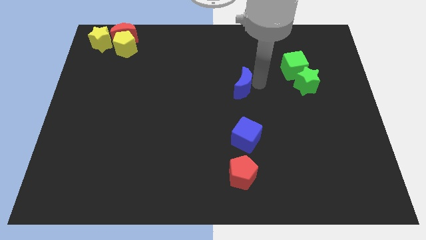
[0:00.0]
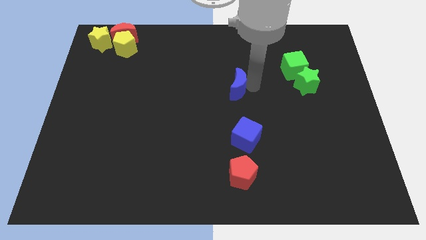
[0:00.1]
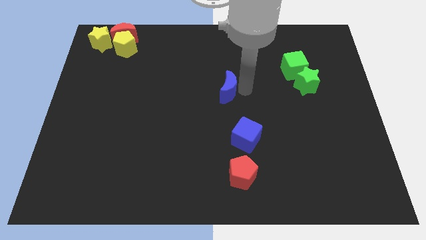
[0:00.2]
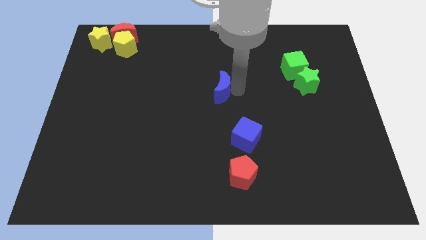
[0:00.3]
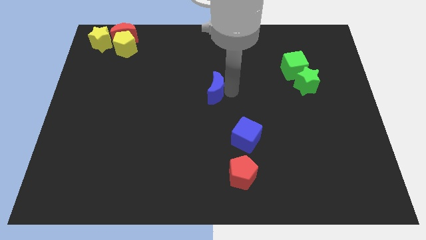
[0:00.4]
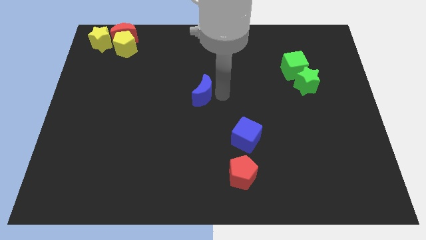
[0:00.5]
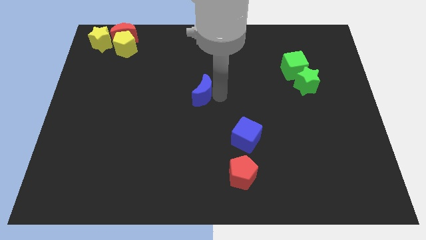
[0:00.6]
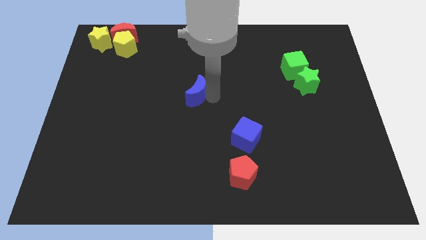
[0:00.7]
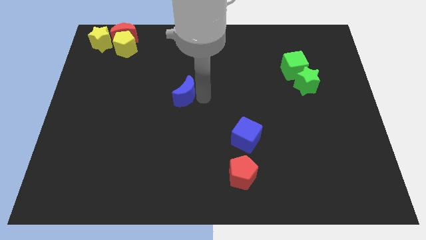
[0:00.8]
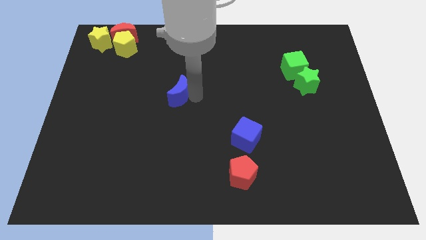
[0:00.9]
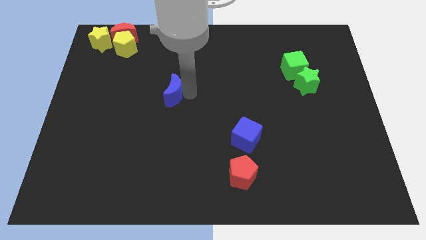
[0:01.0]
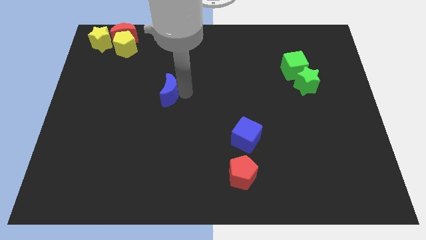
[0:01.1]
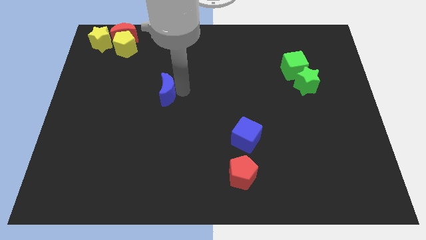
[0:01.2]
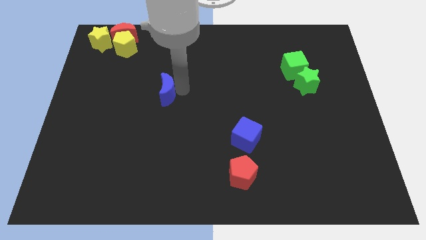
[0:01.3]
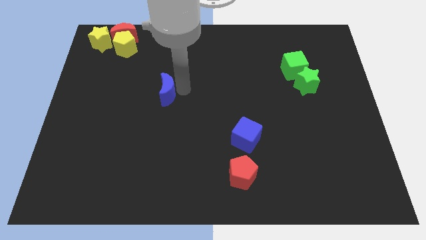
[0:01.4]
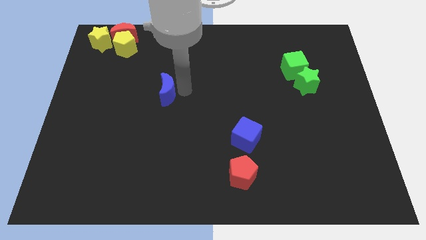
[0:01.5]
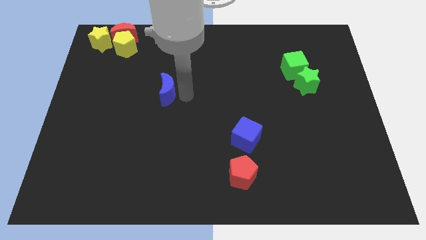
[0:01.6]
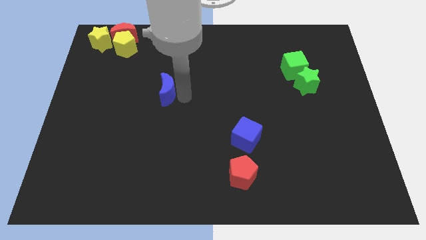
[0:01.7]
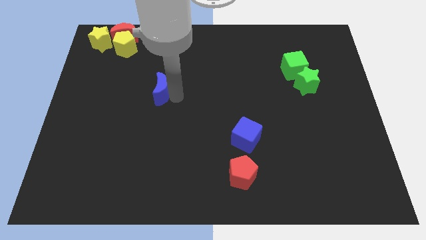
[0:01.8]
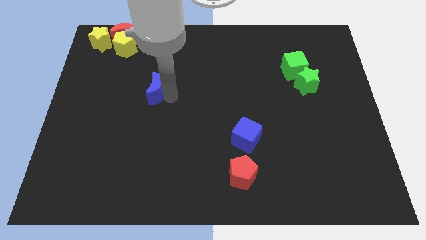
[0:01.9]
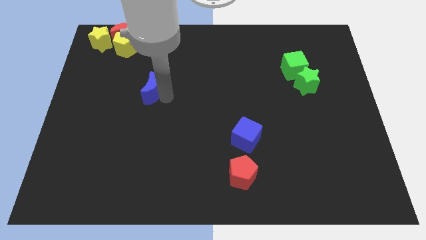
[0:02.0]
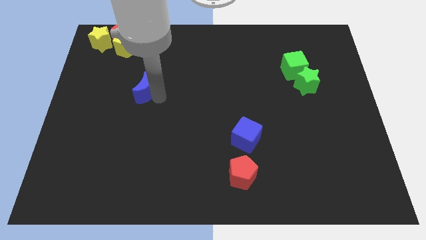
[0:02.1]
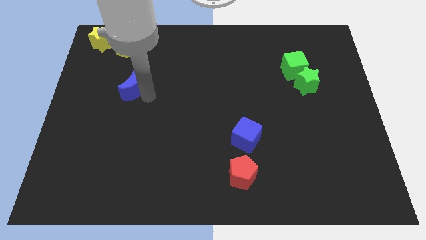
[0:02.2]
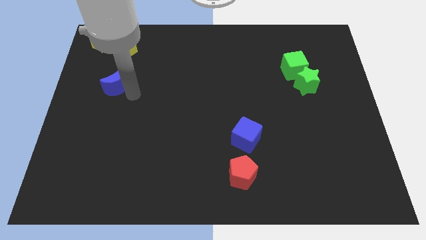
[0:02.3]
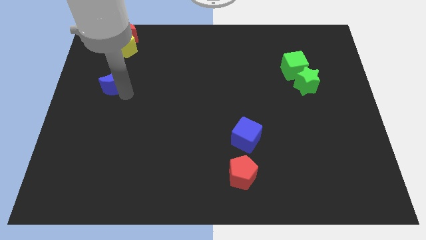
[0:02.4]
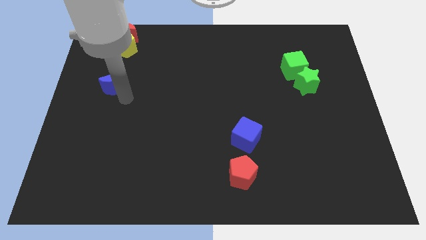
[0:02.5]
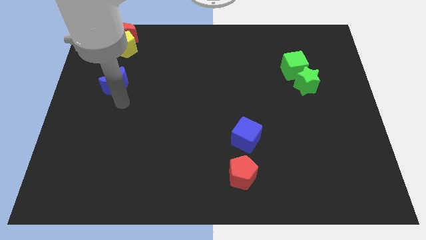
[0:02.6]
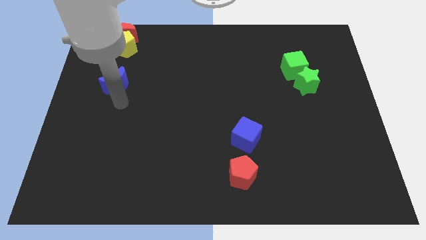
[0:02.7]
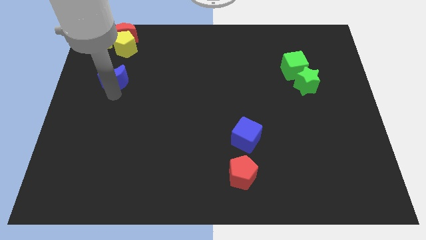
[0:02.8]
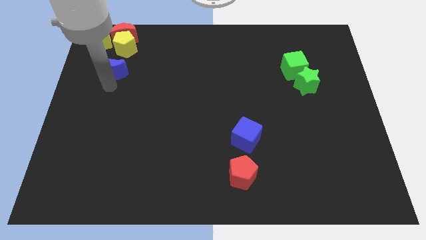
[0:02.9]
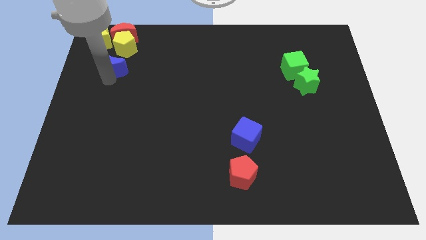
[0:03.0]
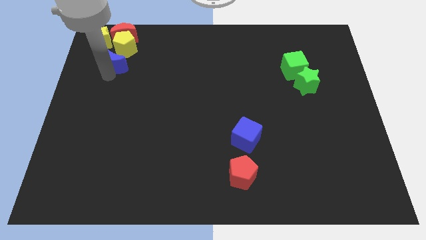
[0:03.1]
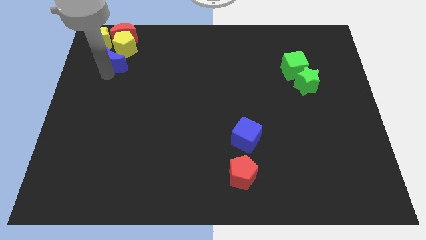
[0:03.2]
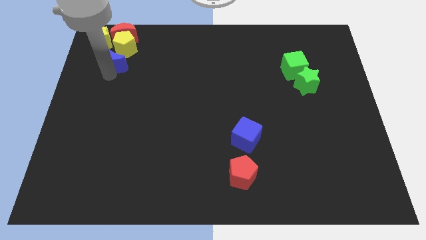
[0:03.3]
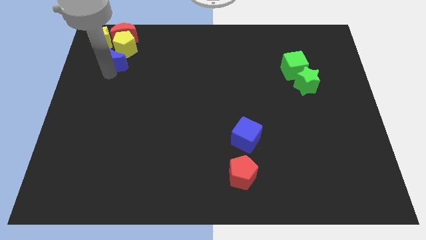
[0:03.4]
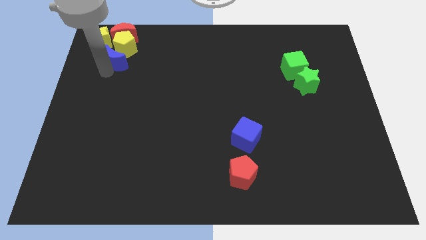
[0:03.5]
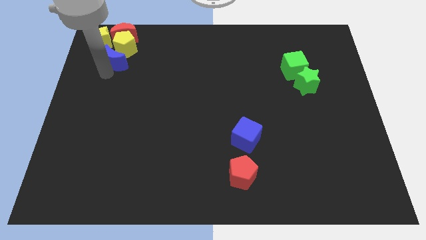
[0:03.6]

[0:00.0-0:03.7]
push the blue moon towards the bottom side of the yellow pentagon

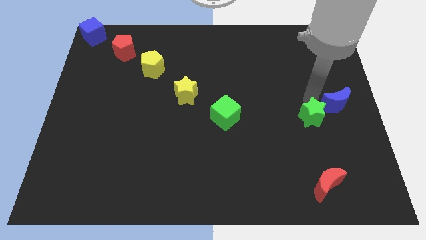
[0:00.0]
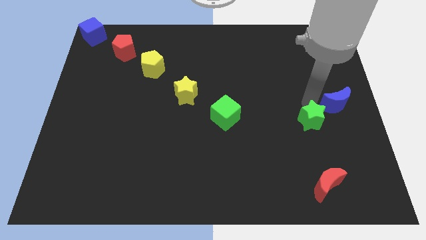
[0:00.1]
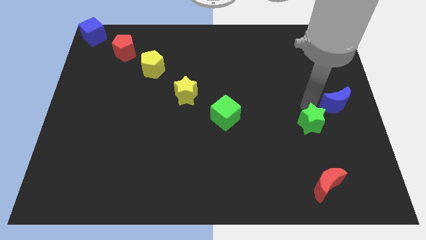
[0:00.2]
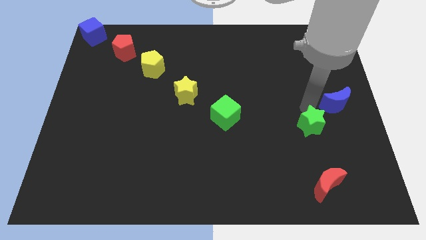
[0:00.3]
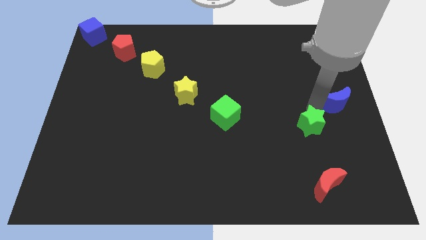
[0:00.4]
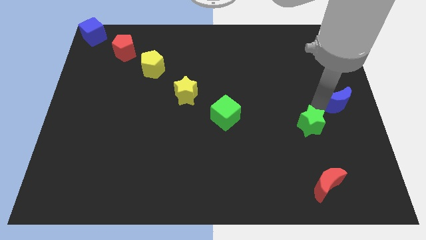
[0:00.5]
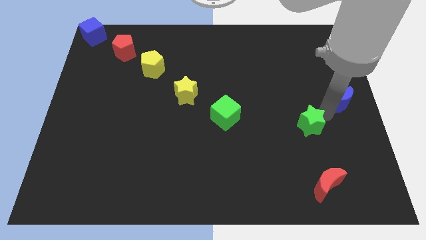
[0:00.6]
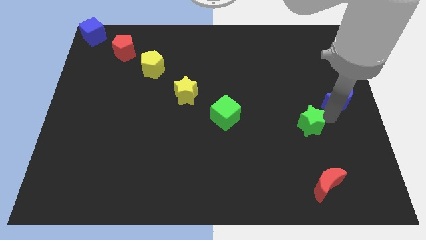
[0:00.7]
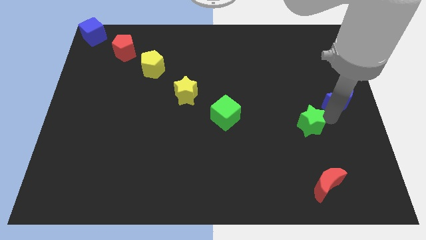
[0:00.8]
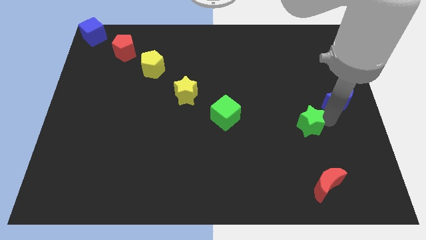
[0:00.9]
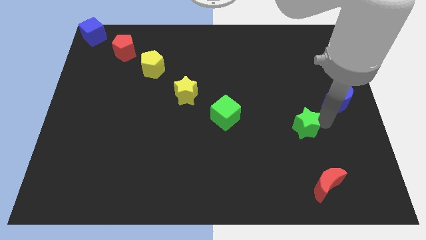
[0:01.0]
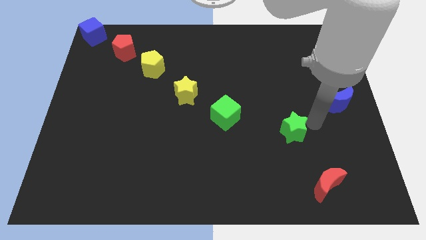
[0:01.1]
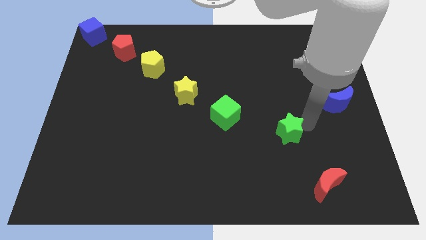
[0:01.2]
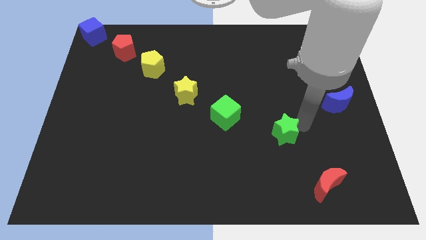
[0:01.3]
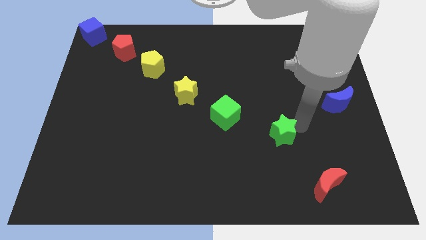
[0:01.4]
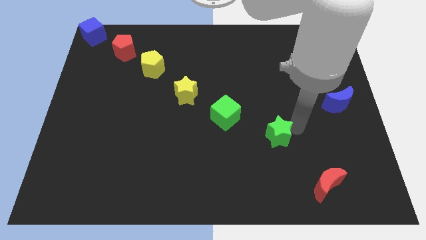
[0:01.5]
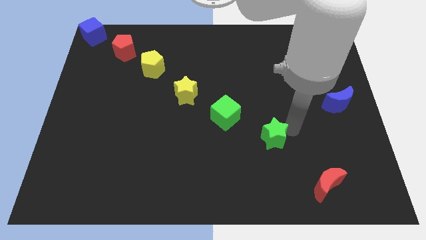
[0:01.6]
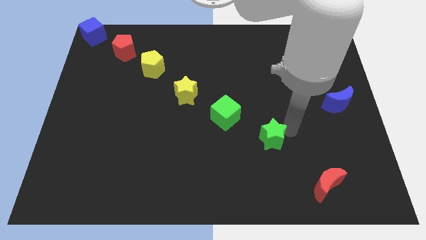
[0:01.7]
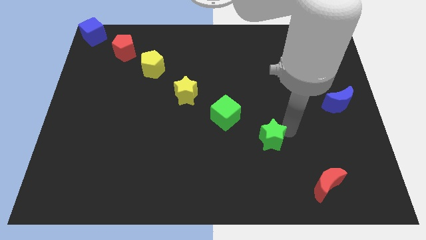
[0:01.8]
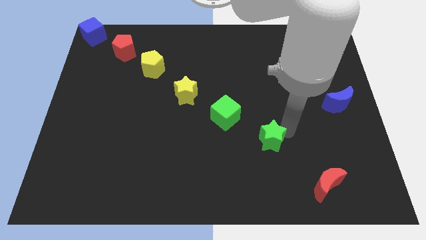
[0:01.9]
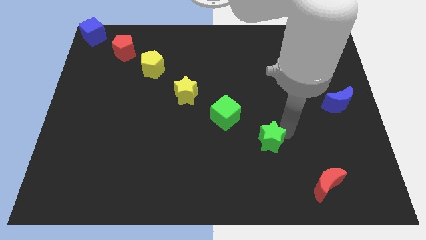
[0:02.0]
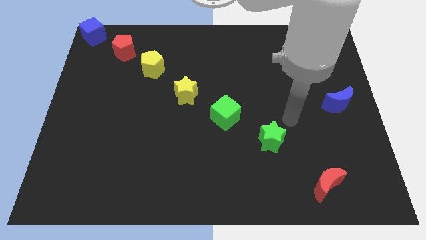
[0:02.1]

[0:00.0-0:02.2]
place the green star near to the green cube

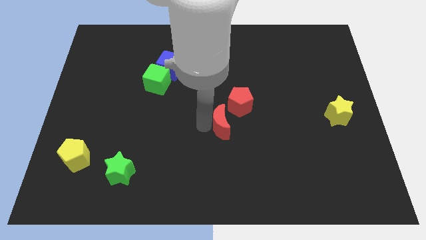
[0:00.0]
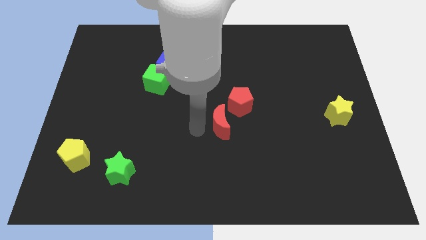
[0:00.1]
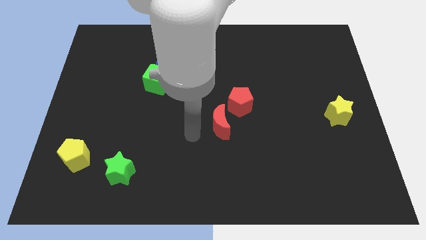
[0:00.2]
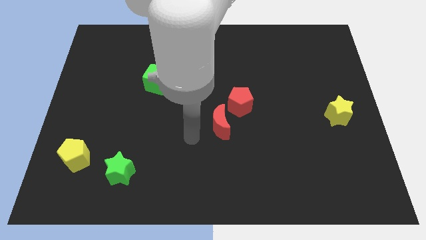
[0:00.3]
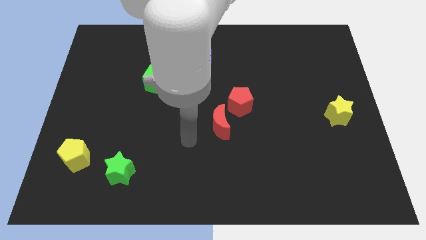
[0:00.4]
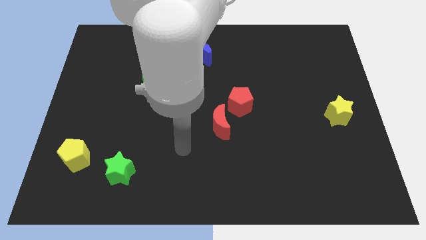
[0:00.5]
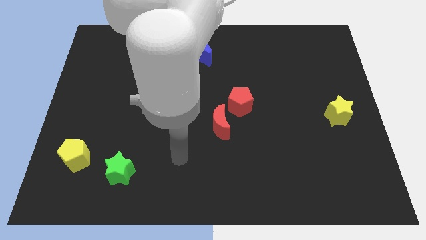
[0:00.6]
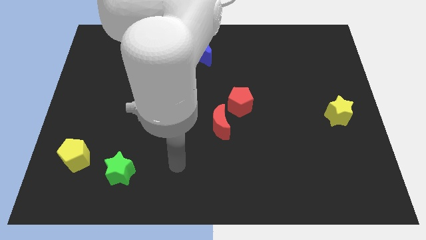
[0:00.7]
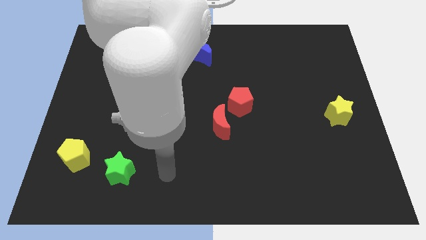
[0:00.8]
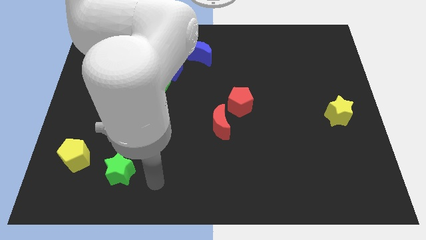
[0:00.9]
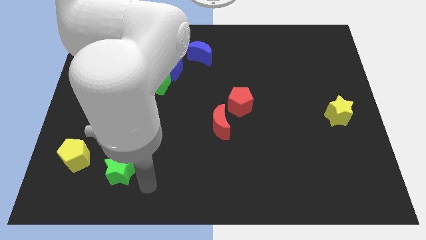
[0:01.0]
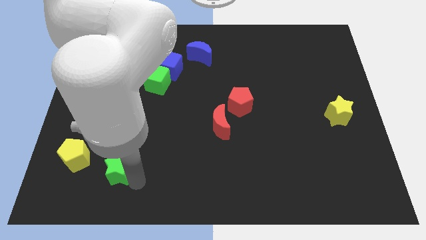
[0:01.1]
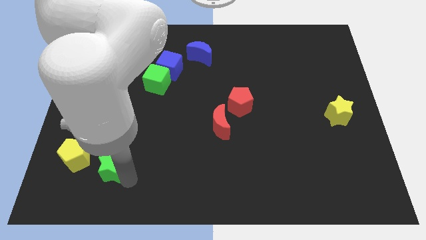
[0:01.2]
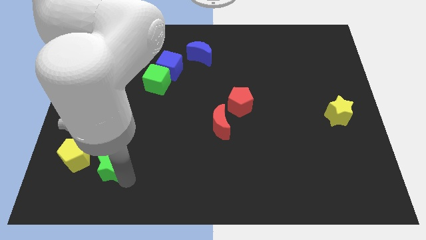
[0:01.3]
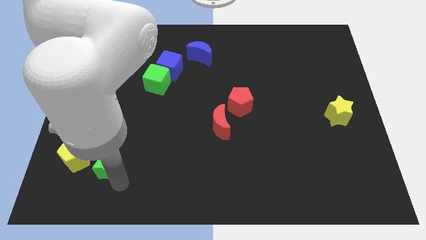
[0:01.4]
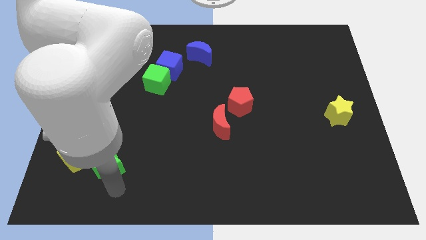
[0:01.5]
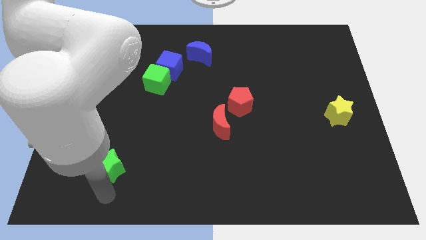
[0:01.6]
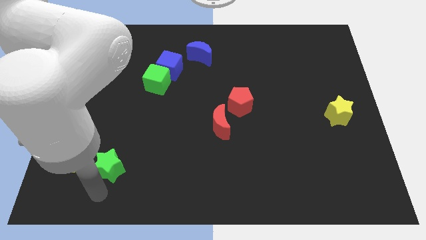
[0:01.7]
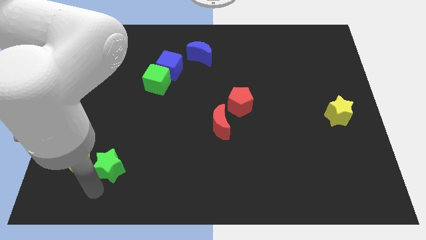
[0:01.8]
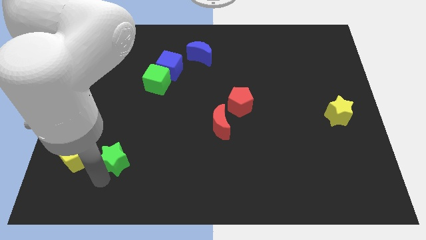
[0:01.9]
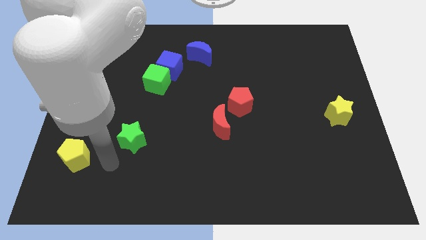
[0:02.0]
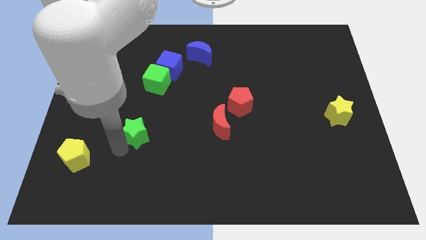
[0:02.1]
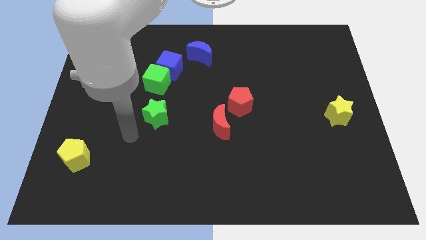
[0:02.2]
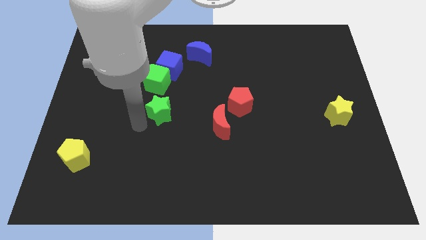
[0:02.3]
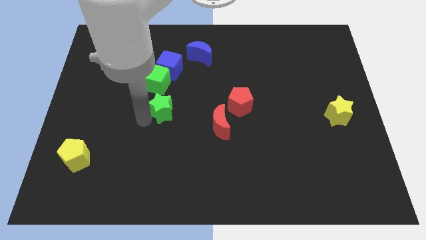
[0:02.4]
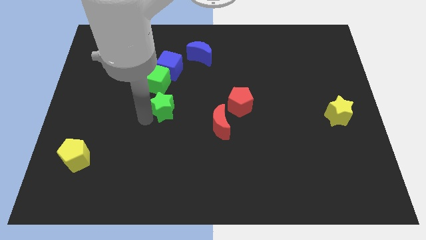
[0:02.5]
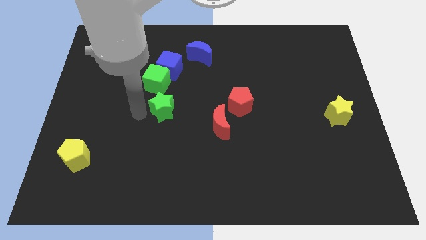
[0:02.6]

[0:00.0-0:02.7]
push green star towards green cube

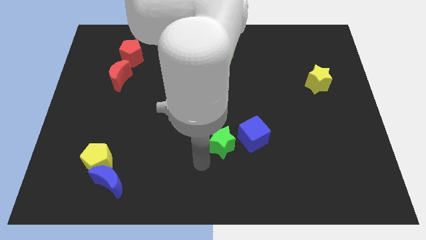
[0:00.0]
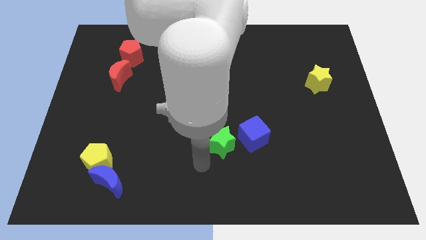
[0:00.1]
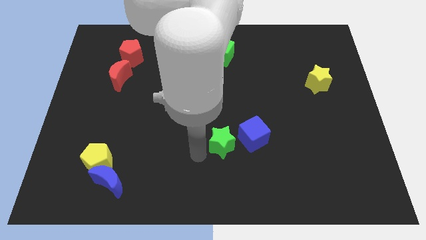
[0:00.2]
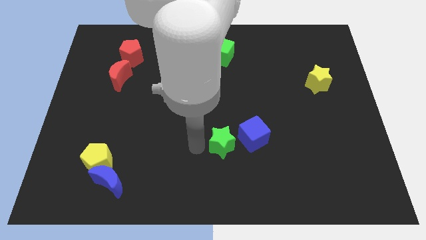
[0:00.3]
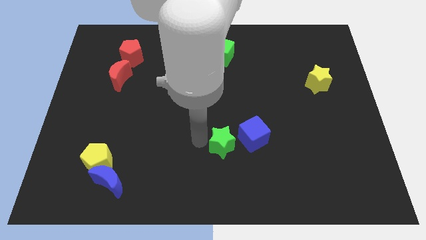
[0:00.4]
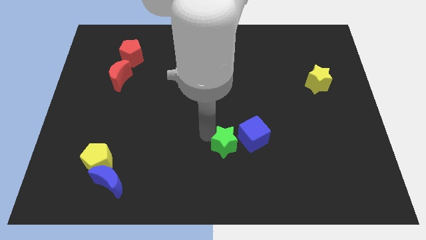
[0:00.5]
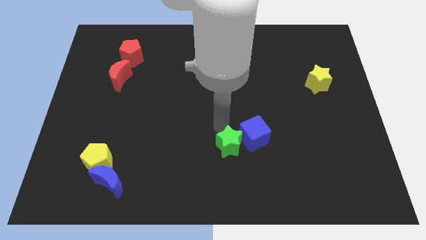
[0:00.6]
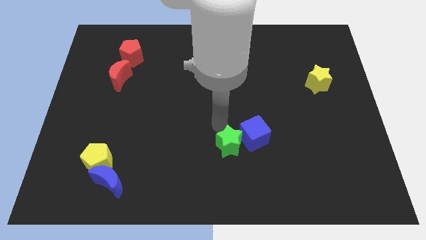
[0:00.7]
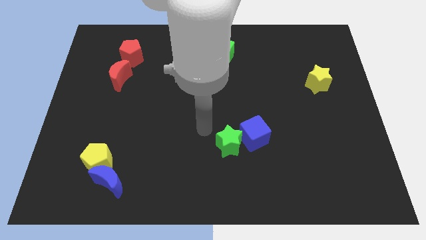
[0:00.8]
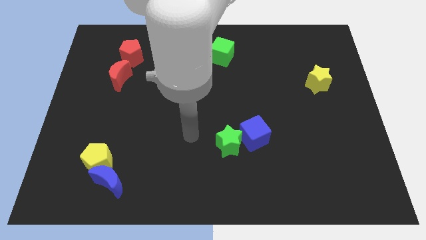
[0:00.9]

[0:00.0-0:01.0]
push the green star into the blue cube
